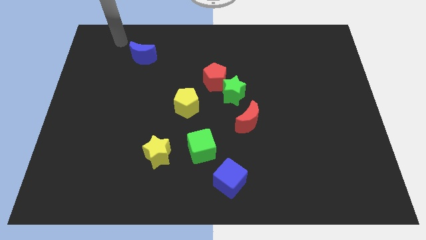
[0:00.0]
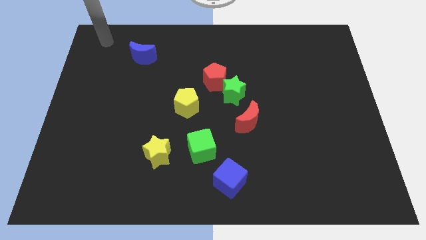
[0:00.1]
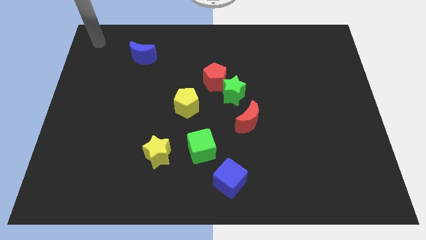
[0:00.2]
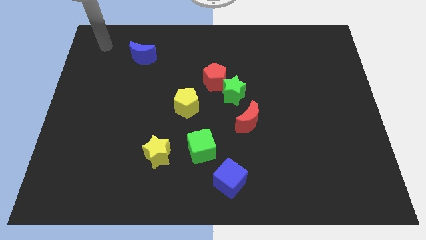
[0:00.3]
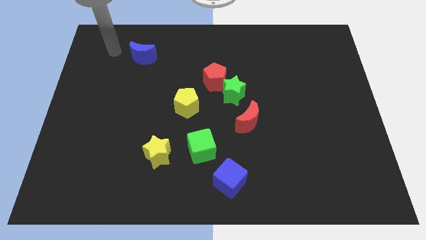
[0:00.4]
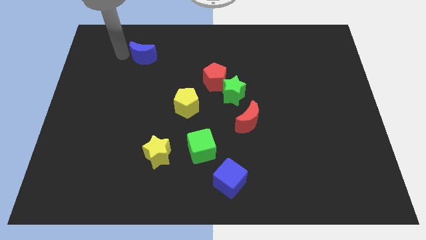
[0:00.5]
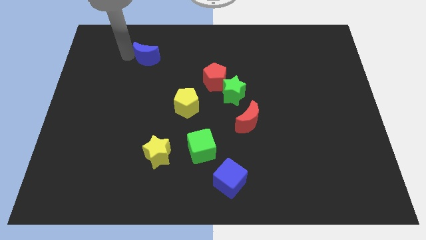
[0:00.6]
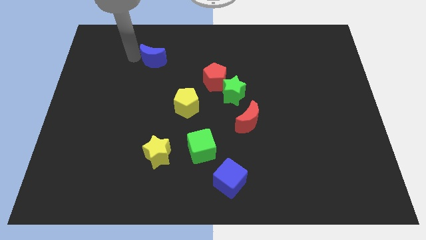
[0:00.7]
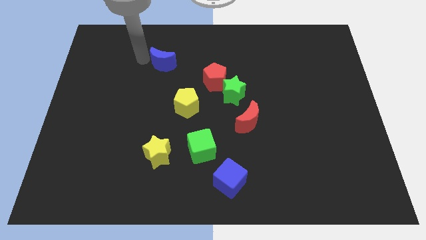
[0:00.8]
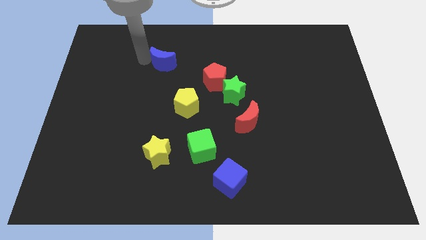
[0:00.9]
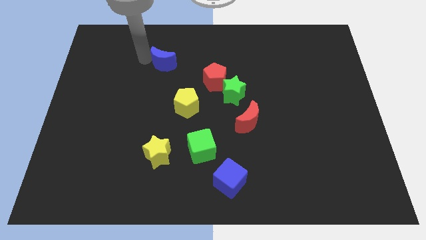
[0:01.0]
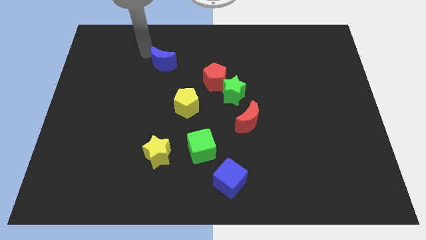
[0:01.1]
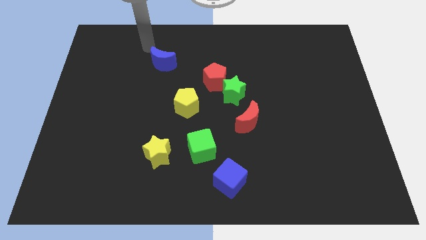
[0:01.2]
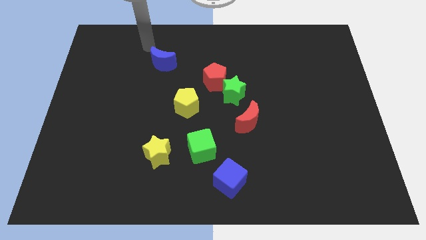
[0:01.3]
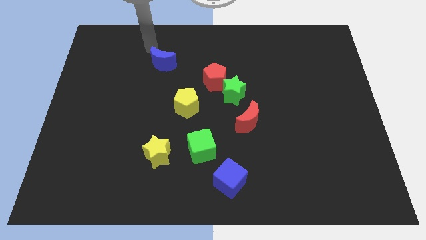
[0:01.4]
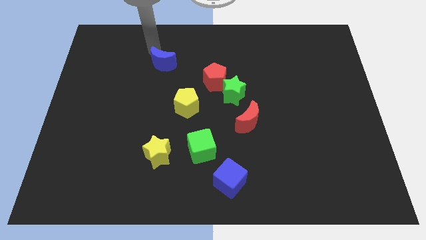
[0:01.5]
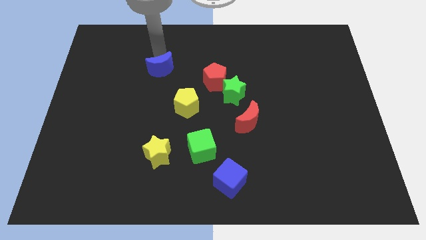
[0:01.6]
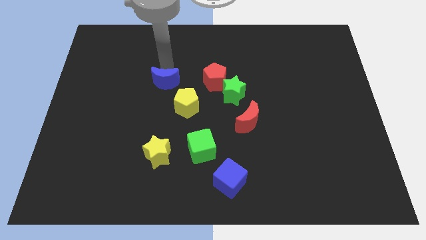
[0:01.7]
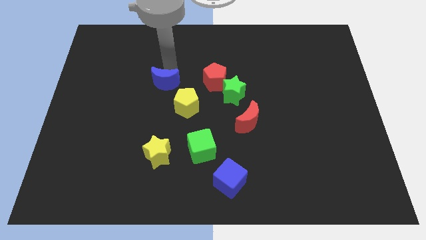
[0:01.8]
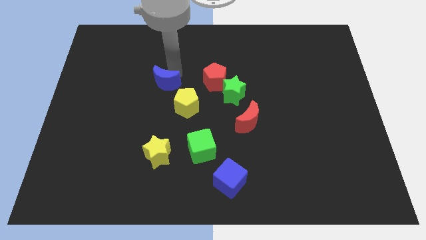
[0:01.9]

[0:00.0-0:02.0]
move the blue moon to the left side of the red pentagon

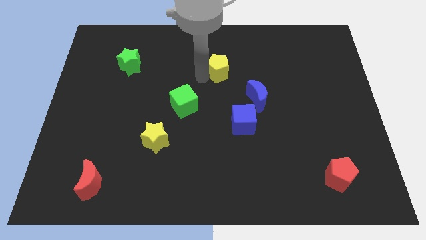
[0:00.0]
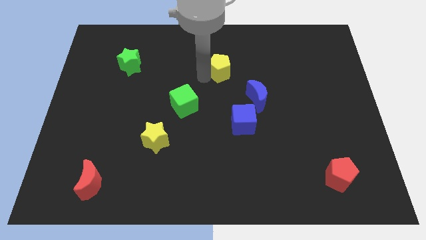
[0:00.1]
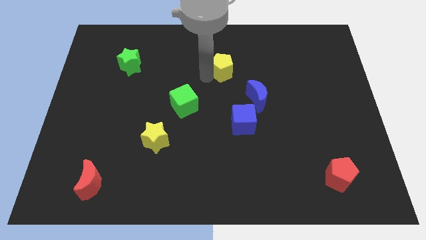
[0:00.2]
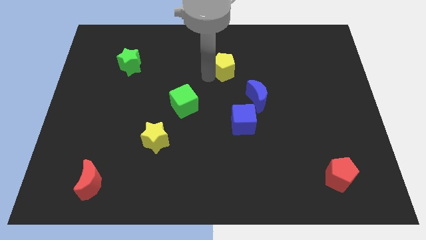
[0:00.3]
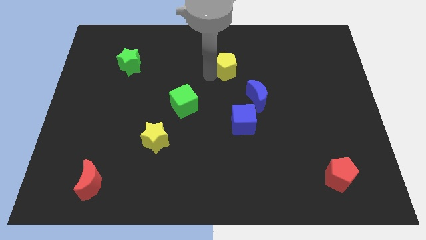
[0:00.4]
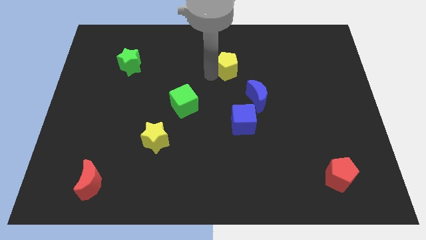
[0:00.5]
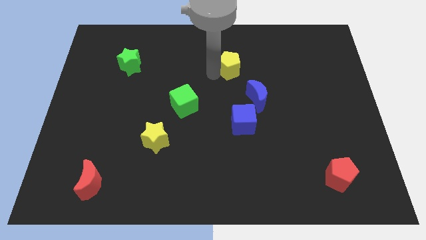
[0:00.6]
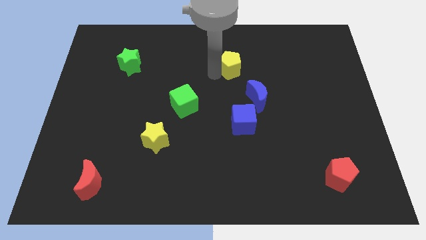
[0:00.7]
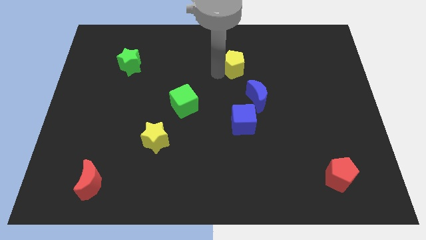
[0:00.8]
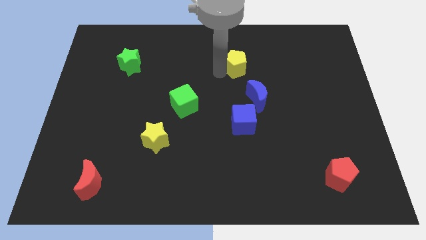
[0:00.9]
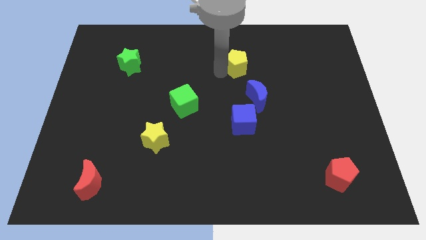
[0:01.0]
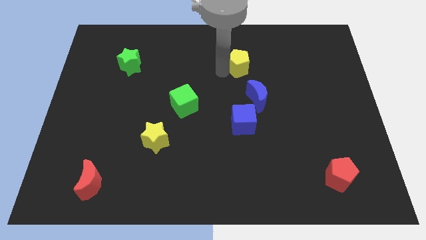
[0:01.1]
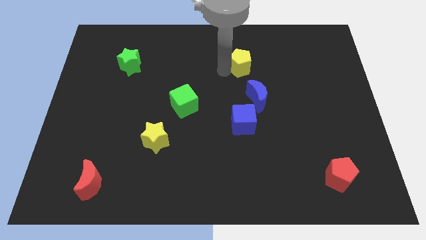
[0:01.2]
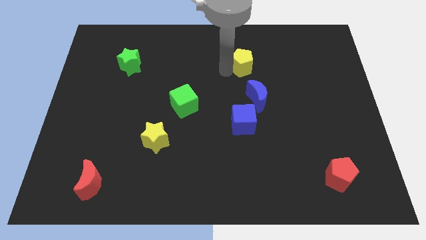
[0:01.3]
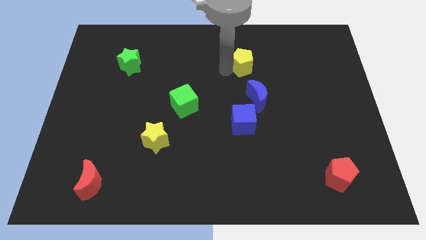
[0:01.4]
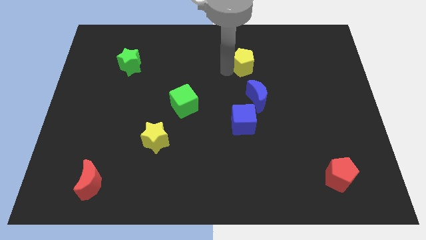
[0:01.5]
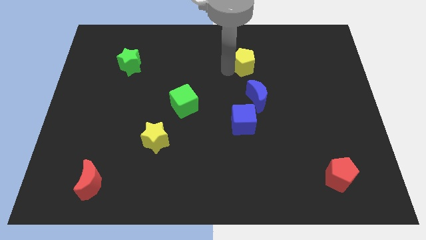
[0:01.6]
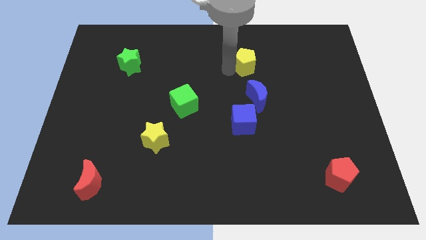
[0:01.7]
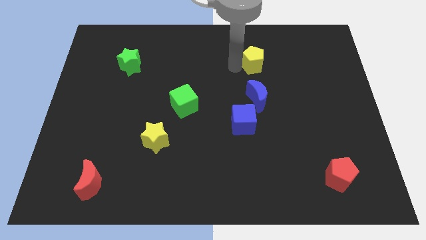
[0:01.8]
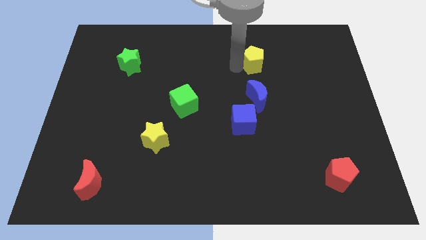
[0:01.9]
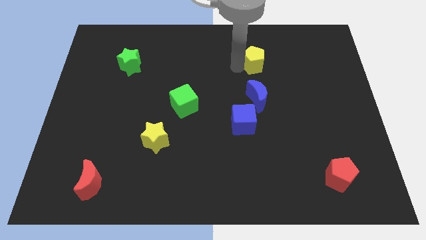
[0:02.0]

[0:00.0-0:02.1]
place yellow pentagon to the top of blue moon

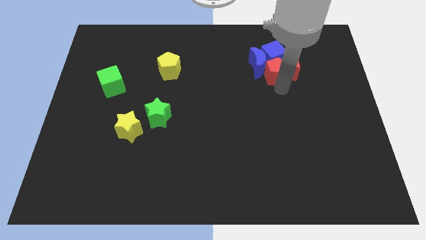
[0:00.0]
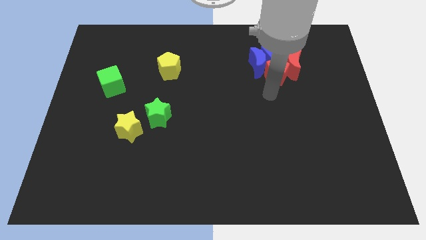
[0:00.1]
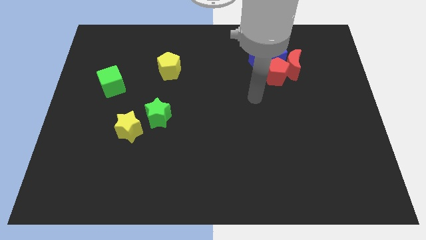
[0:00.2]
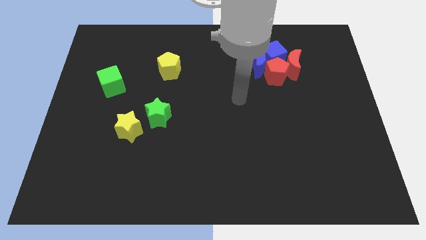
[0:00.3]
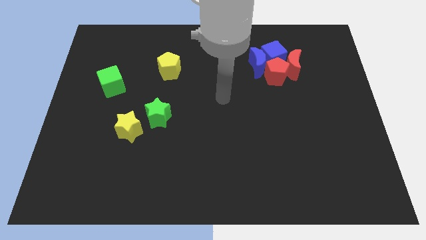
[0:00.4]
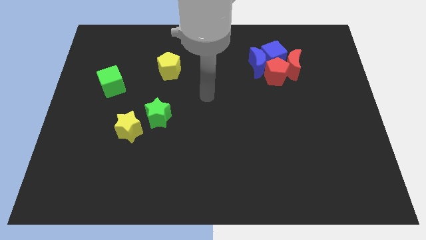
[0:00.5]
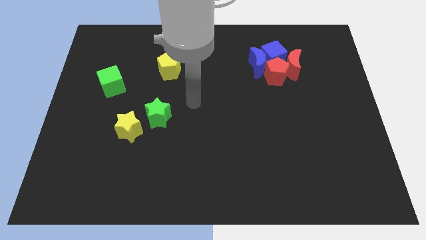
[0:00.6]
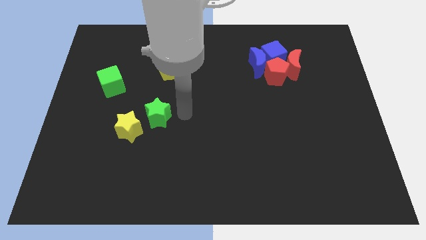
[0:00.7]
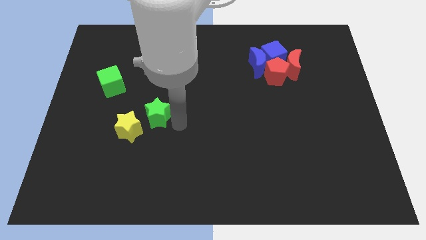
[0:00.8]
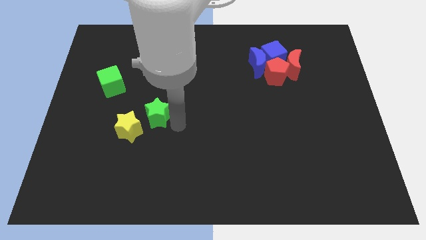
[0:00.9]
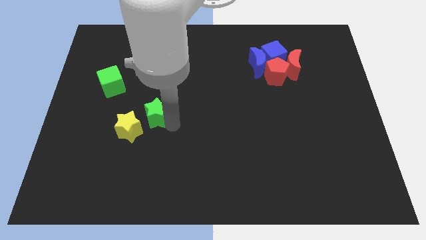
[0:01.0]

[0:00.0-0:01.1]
point your arm below green star

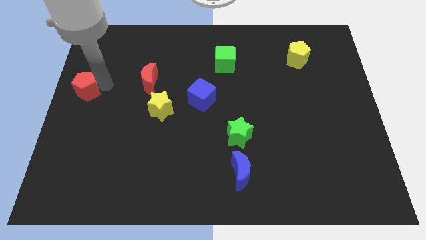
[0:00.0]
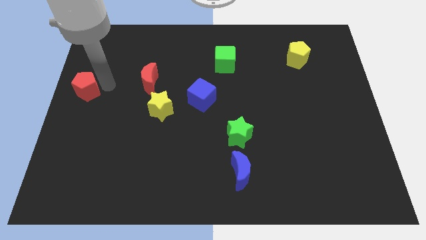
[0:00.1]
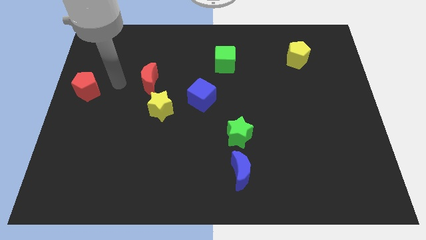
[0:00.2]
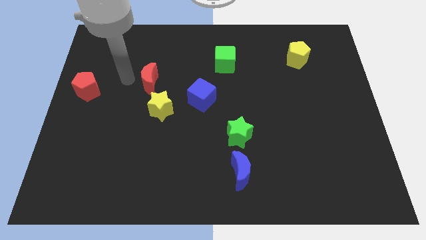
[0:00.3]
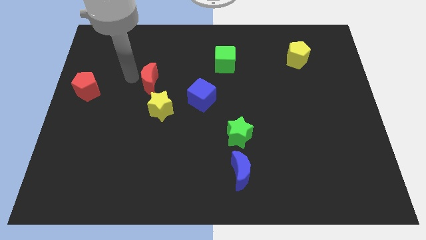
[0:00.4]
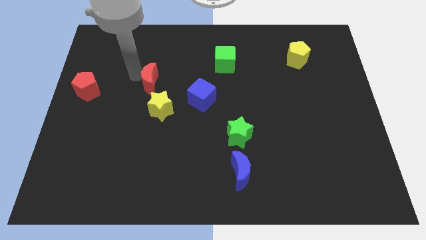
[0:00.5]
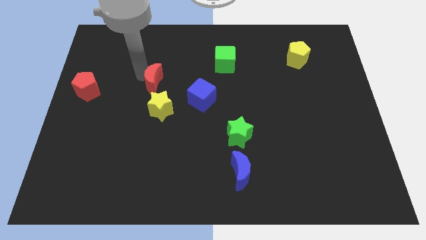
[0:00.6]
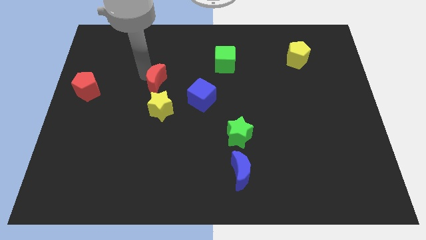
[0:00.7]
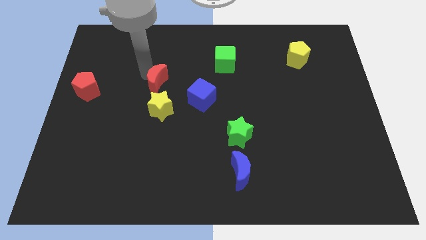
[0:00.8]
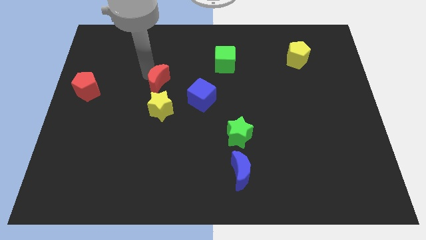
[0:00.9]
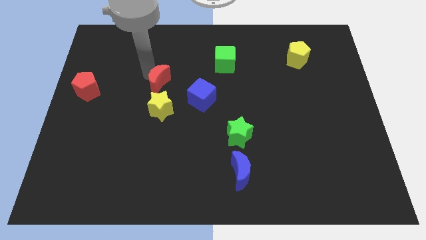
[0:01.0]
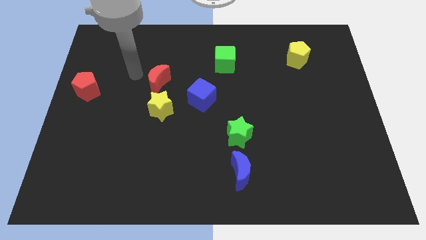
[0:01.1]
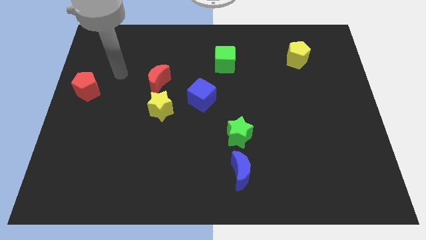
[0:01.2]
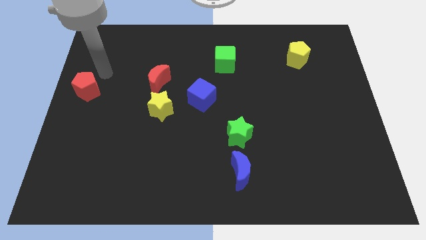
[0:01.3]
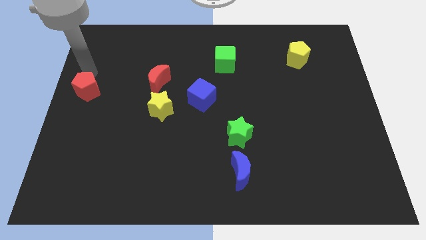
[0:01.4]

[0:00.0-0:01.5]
push the red crescent slightly to the right

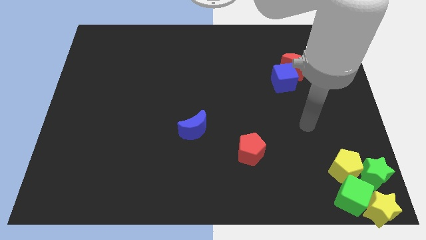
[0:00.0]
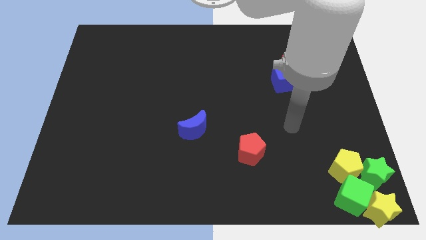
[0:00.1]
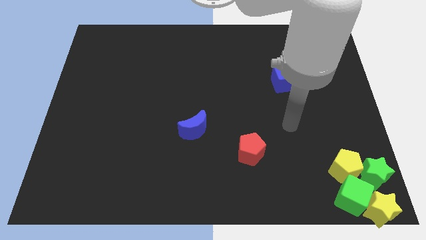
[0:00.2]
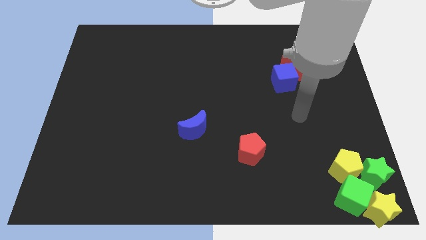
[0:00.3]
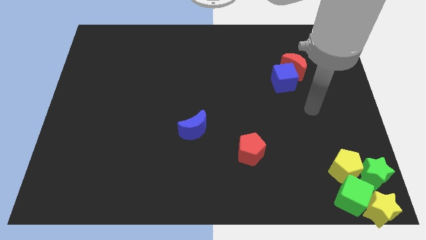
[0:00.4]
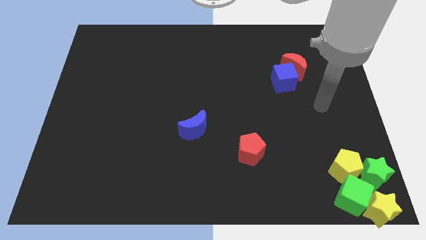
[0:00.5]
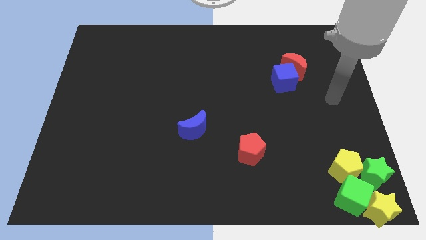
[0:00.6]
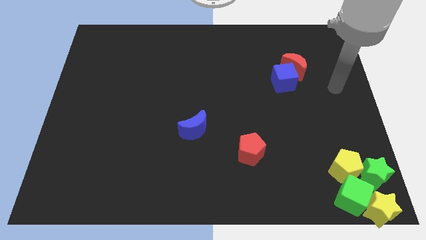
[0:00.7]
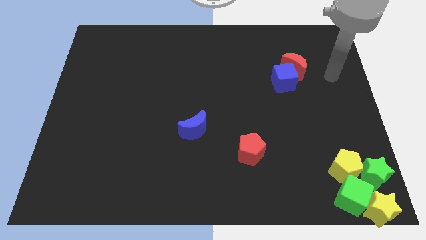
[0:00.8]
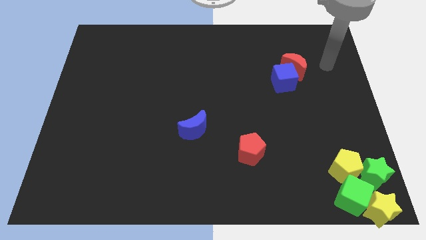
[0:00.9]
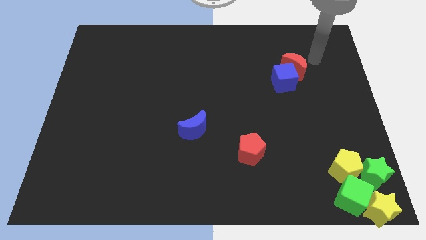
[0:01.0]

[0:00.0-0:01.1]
move your arm to the top right of the red crescent

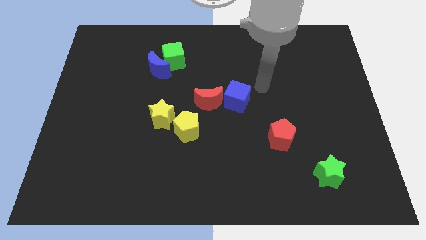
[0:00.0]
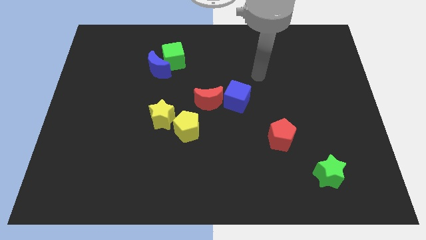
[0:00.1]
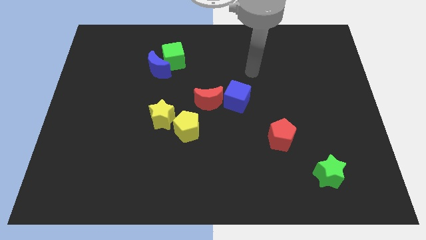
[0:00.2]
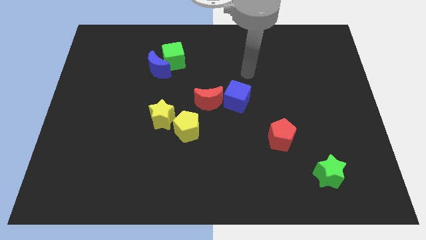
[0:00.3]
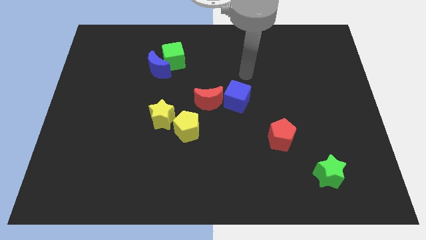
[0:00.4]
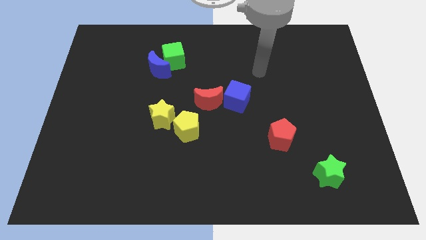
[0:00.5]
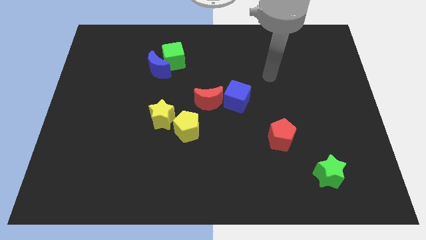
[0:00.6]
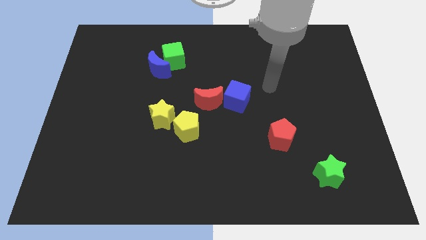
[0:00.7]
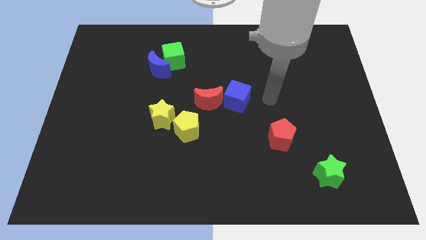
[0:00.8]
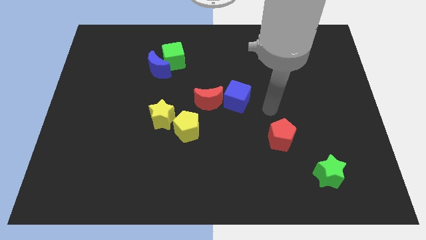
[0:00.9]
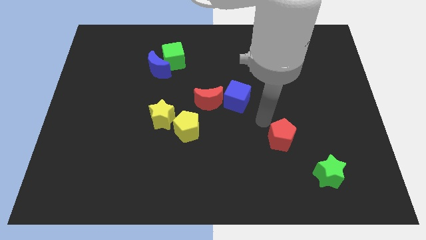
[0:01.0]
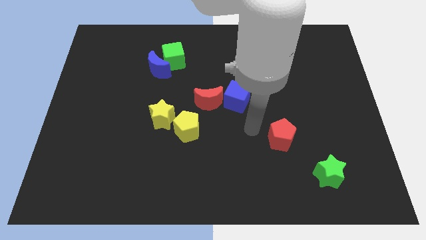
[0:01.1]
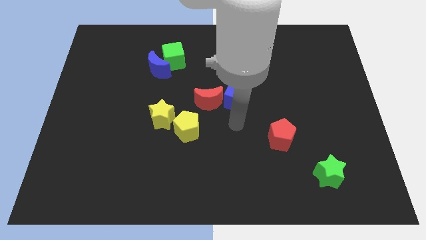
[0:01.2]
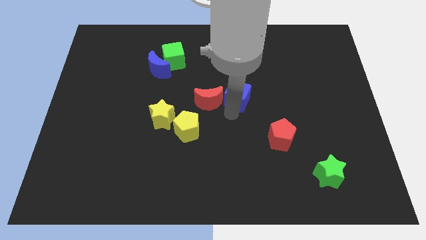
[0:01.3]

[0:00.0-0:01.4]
move the arm towards the center of the board
